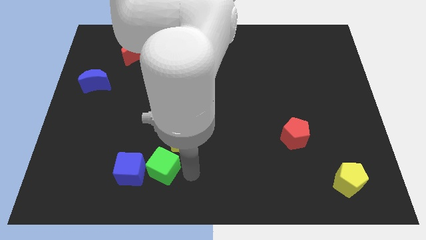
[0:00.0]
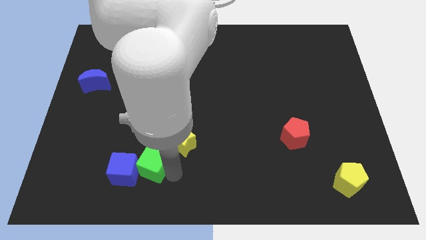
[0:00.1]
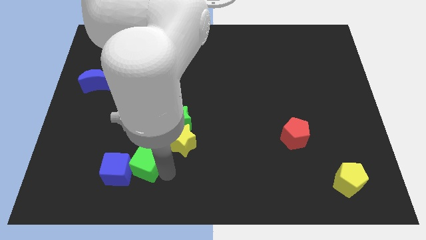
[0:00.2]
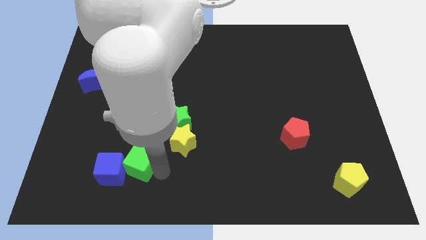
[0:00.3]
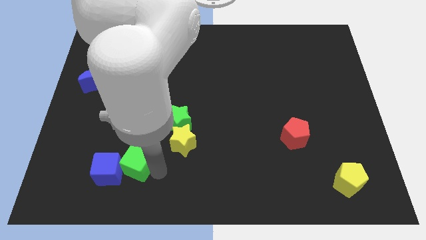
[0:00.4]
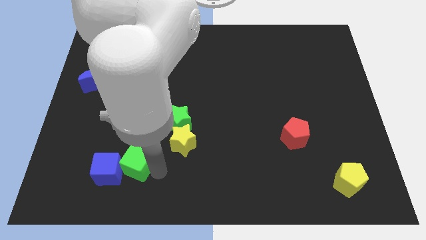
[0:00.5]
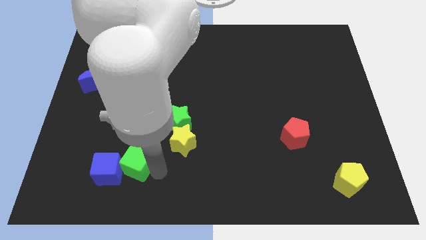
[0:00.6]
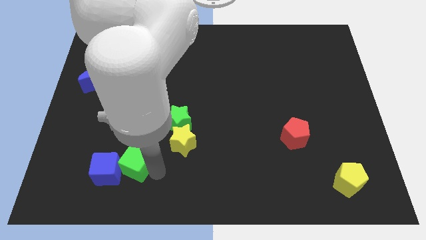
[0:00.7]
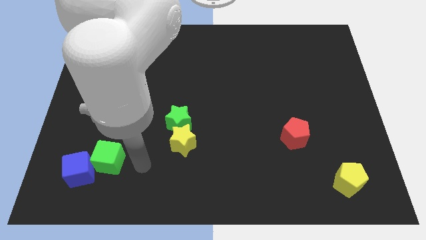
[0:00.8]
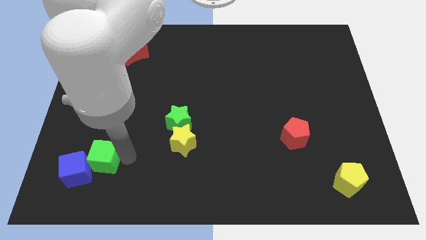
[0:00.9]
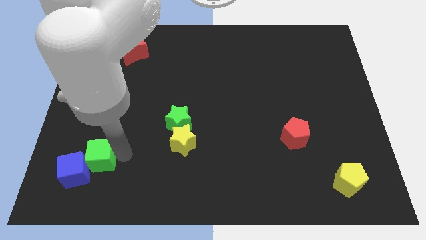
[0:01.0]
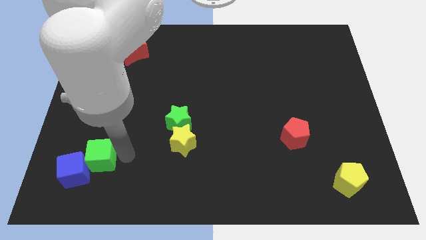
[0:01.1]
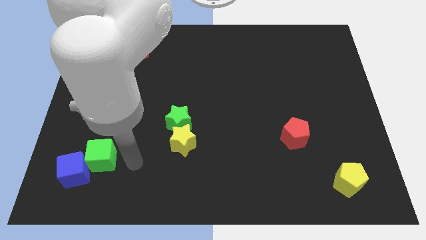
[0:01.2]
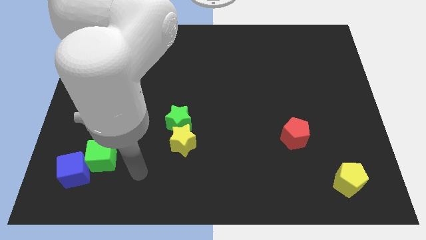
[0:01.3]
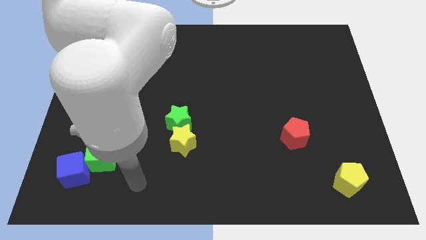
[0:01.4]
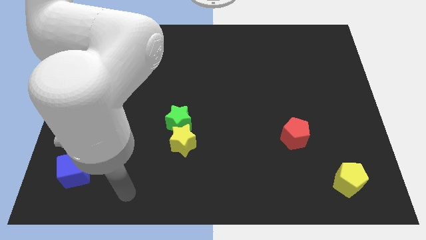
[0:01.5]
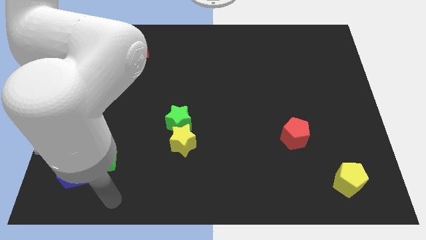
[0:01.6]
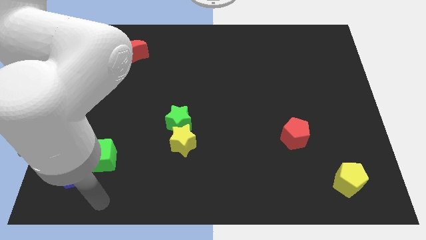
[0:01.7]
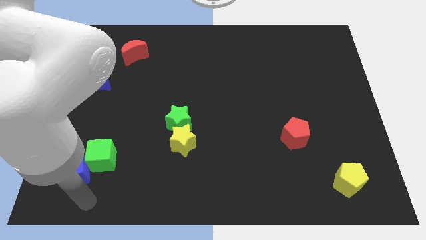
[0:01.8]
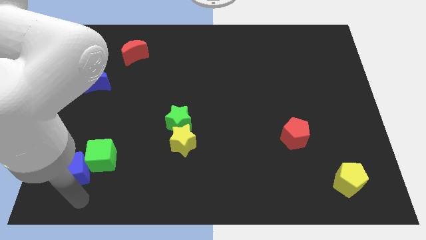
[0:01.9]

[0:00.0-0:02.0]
move the green cube and blue cube to the bottom left side

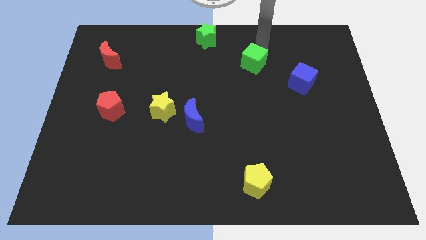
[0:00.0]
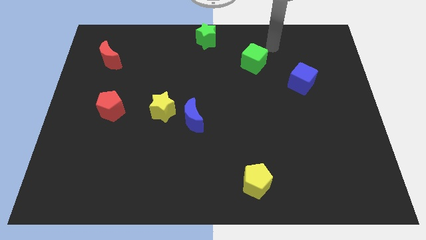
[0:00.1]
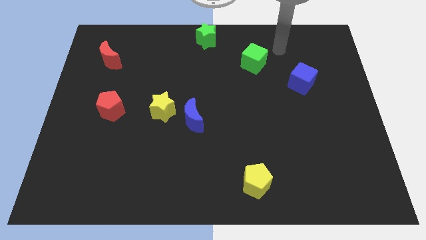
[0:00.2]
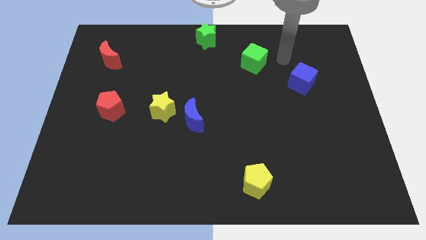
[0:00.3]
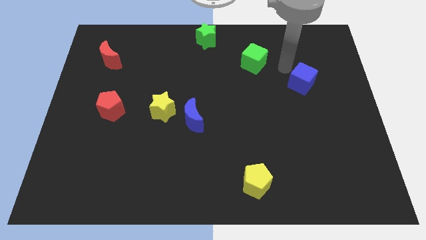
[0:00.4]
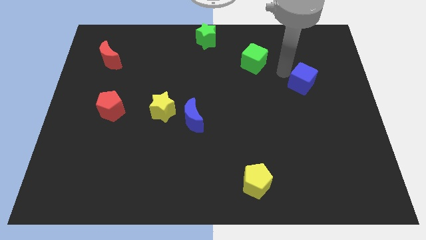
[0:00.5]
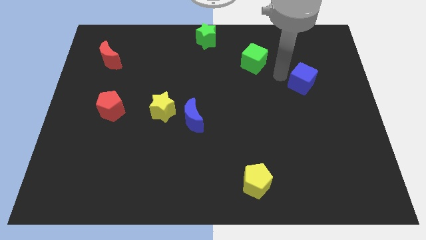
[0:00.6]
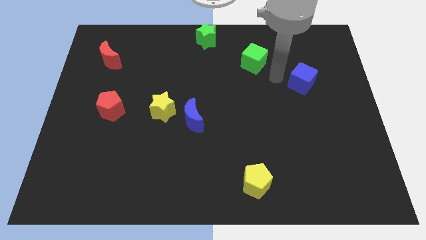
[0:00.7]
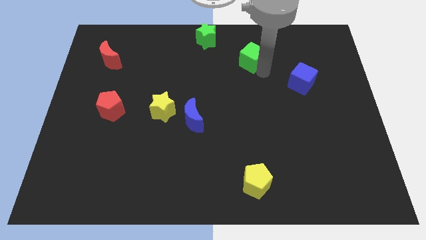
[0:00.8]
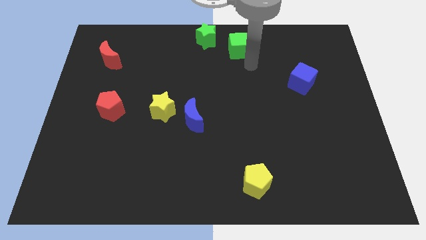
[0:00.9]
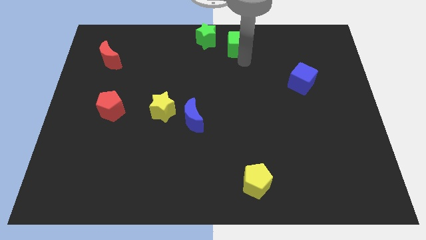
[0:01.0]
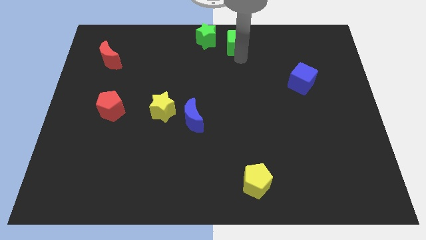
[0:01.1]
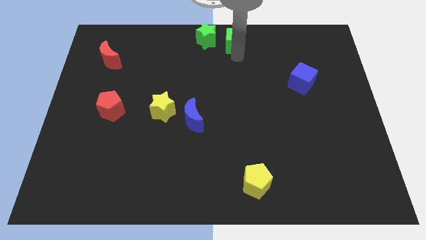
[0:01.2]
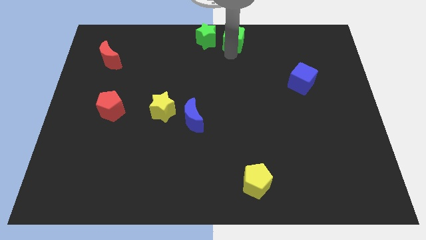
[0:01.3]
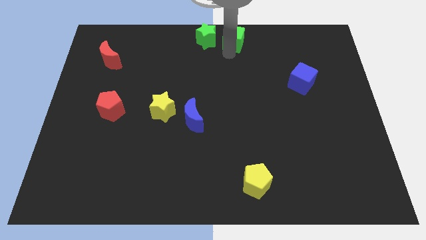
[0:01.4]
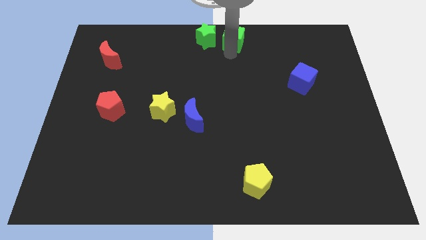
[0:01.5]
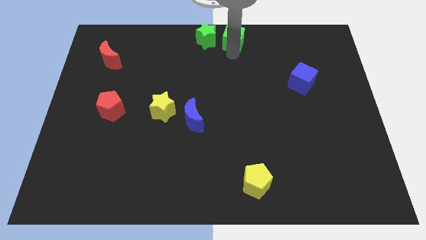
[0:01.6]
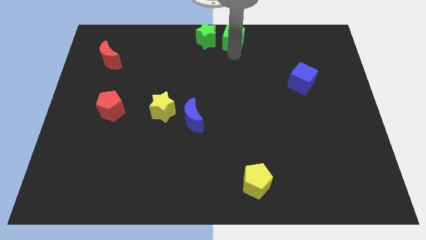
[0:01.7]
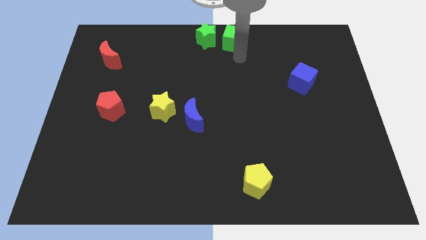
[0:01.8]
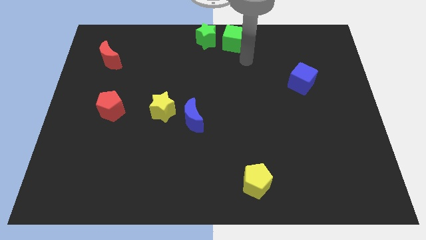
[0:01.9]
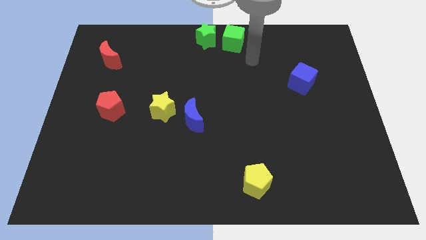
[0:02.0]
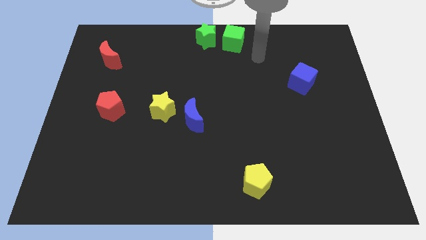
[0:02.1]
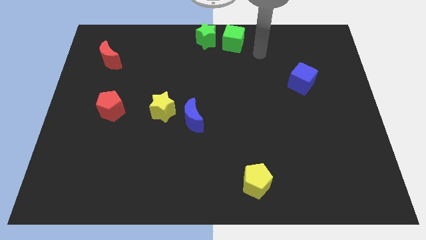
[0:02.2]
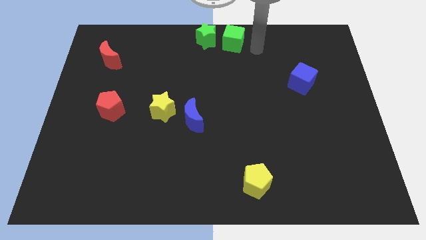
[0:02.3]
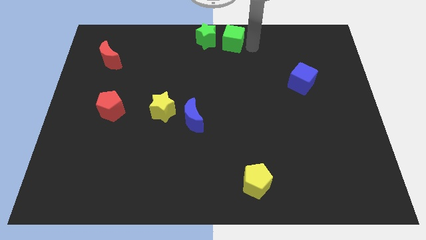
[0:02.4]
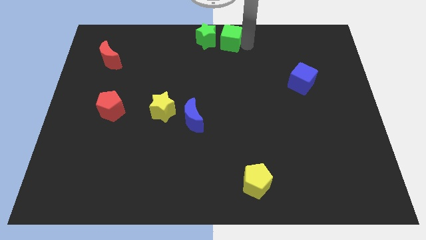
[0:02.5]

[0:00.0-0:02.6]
place the green cube to the right of the green cube

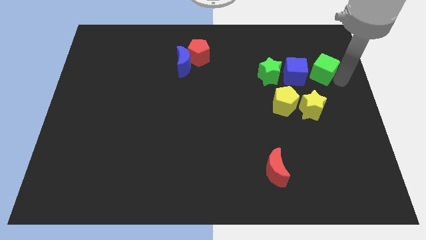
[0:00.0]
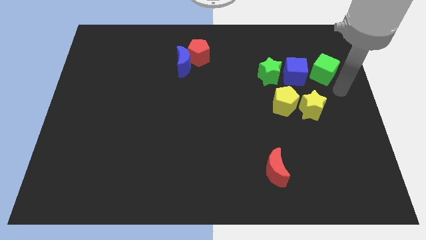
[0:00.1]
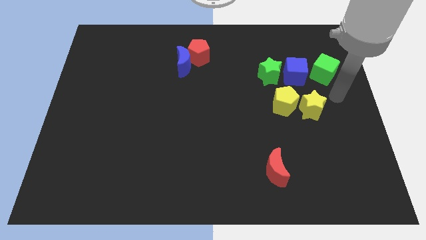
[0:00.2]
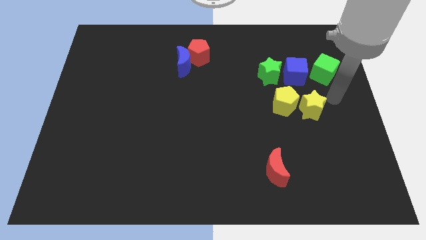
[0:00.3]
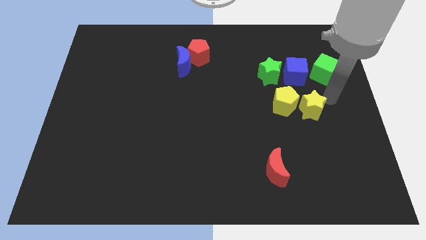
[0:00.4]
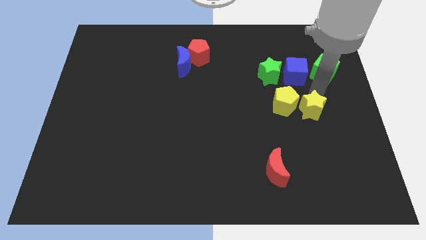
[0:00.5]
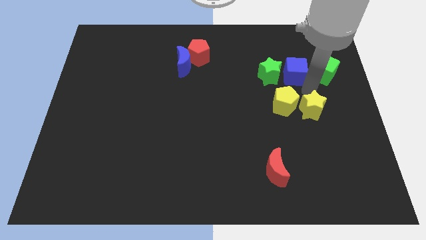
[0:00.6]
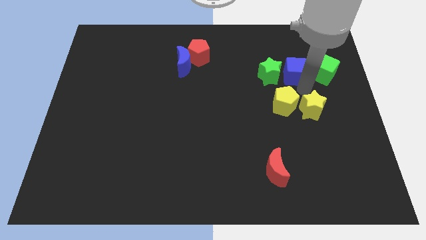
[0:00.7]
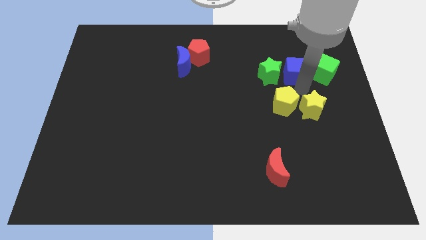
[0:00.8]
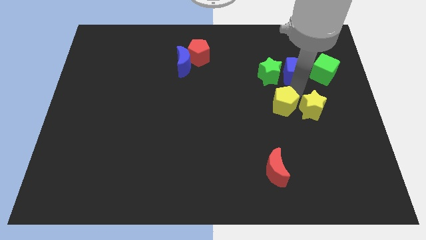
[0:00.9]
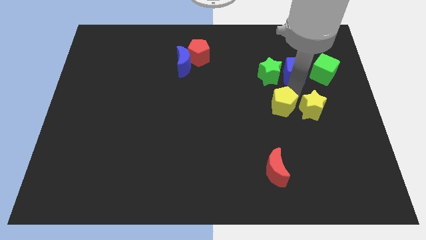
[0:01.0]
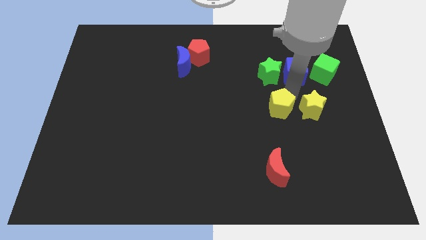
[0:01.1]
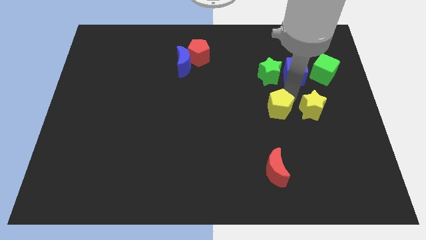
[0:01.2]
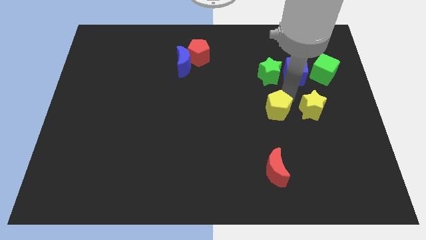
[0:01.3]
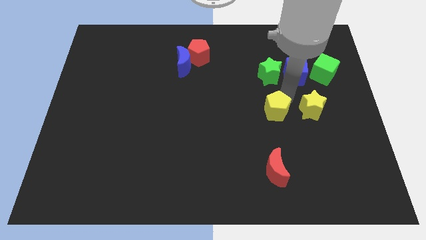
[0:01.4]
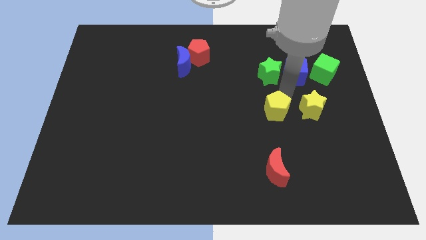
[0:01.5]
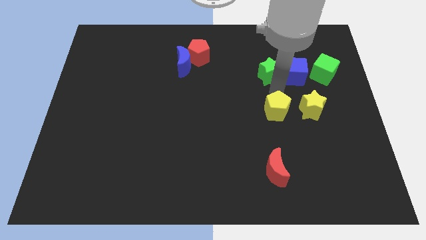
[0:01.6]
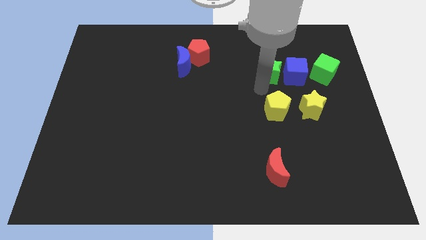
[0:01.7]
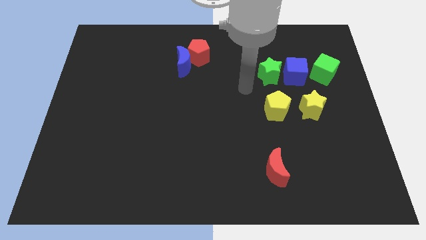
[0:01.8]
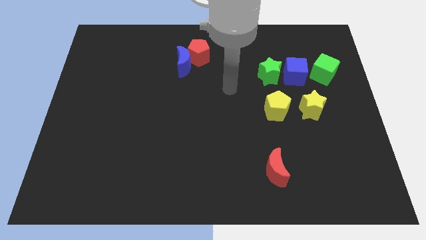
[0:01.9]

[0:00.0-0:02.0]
place the yellow pentagon towards the left of the yellow star

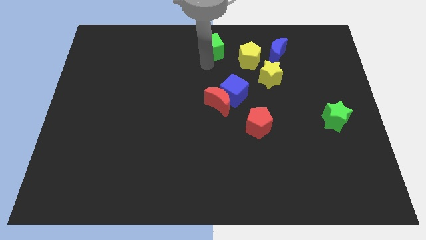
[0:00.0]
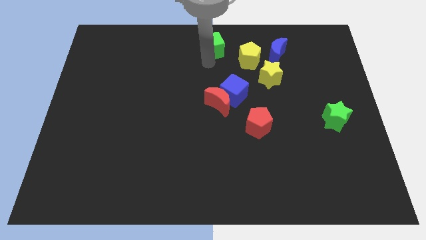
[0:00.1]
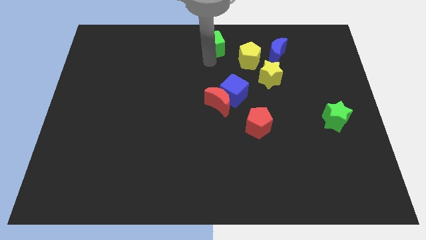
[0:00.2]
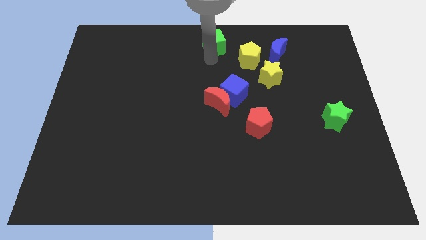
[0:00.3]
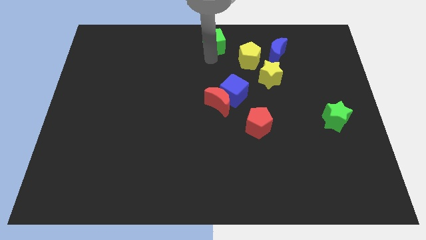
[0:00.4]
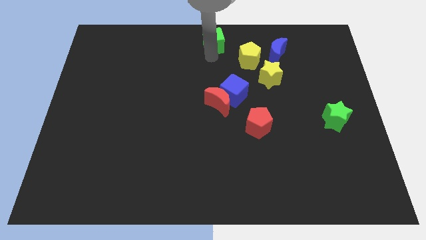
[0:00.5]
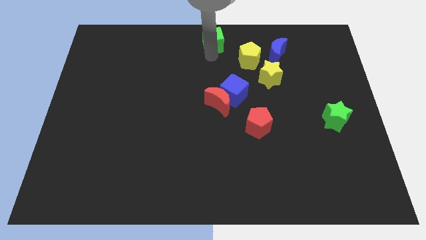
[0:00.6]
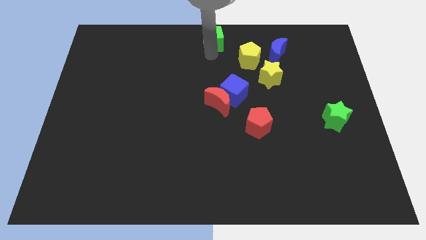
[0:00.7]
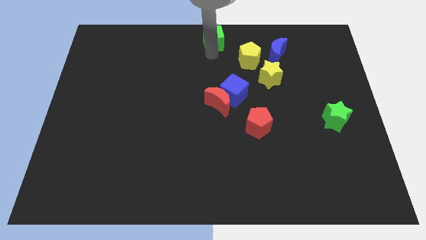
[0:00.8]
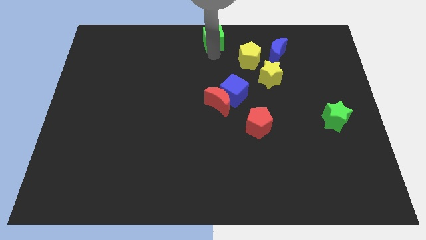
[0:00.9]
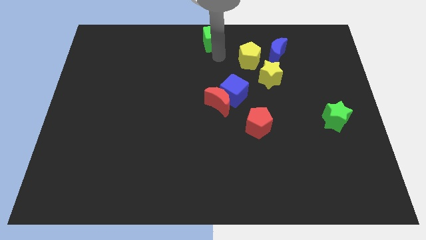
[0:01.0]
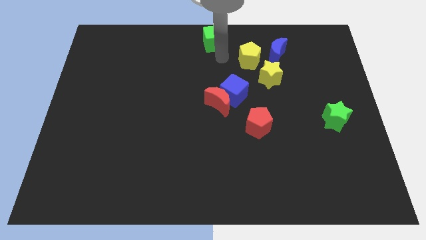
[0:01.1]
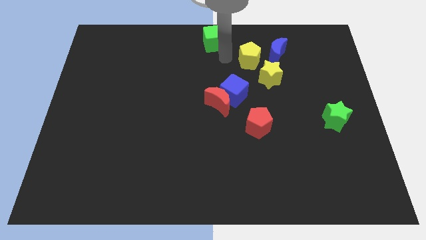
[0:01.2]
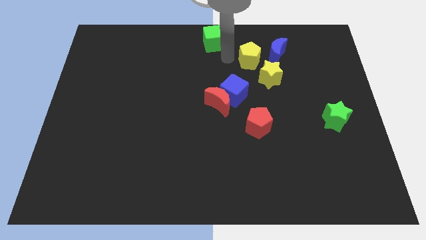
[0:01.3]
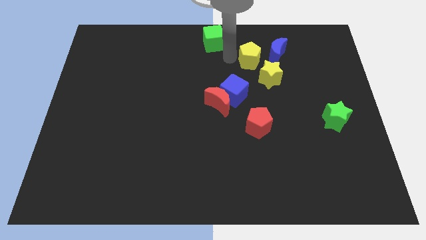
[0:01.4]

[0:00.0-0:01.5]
move the green cube to the top center of the board

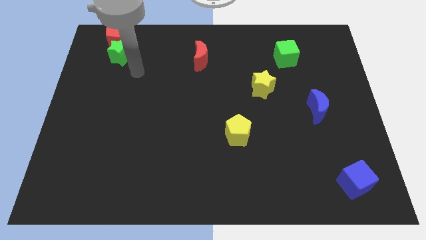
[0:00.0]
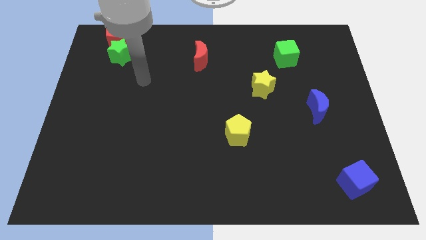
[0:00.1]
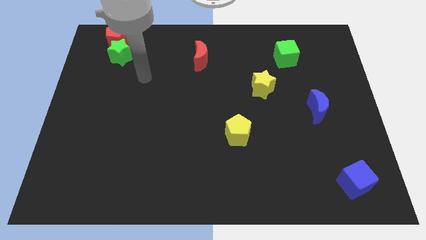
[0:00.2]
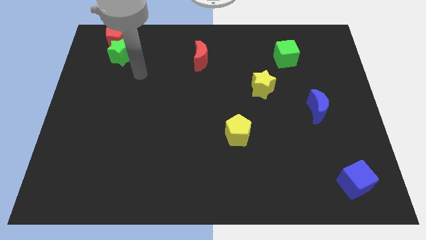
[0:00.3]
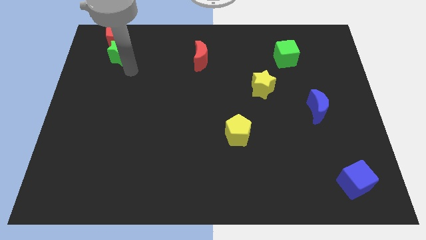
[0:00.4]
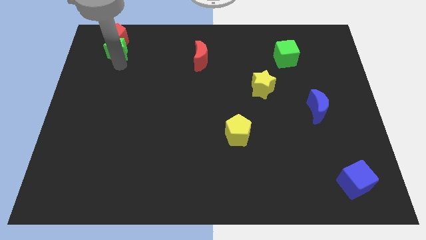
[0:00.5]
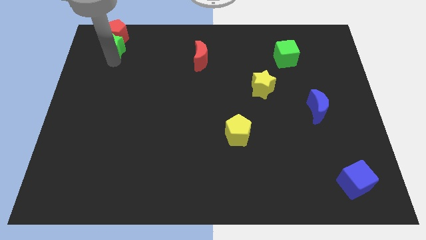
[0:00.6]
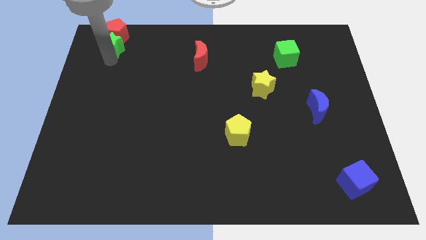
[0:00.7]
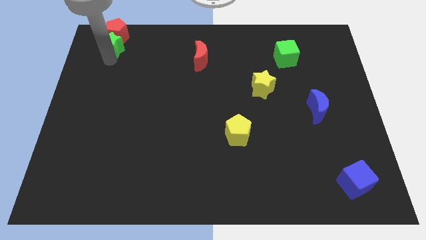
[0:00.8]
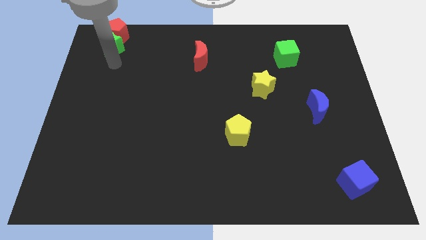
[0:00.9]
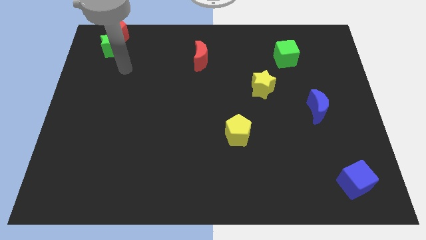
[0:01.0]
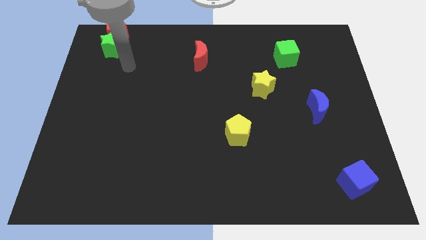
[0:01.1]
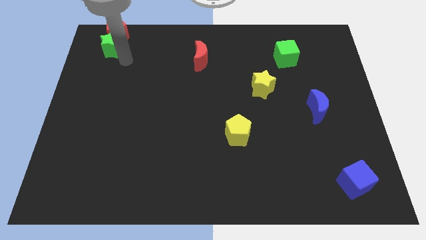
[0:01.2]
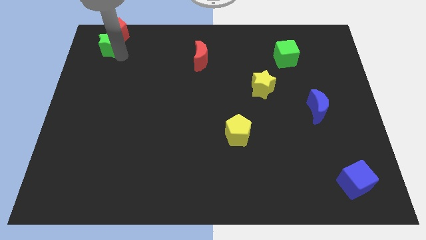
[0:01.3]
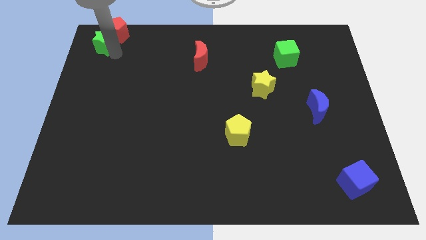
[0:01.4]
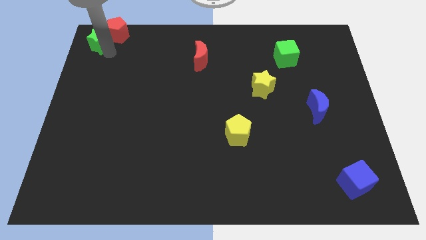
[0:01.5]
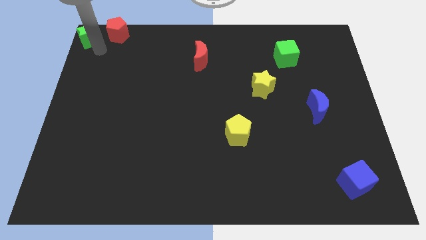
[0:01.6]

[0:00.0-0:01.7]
push the green star into the red pentagon
